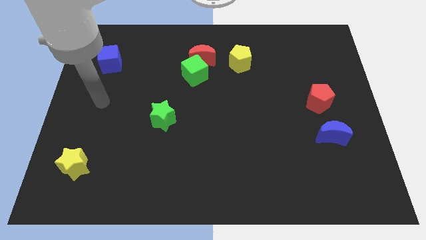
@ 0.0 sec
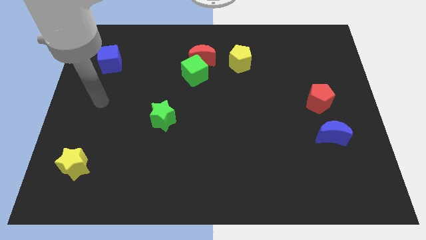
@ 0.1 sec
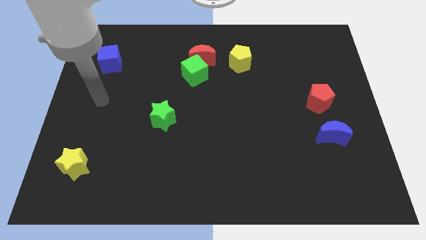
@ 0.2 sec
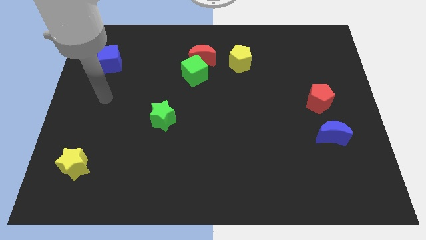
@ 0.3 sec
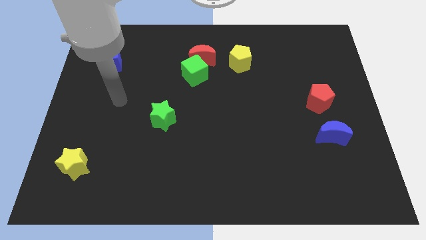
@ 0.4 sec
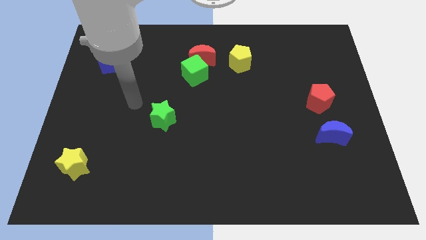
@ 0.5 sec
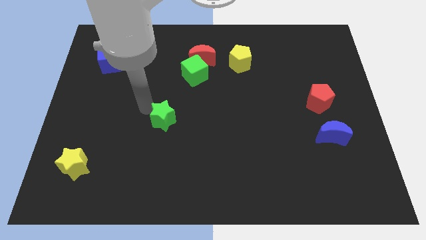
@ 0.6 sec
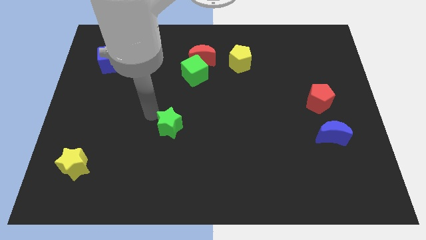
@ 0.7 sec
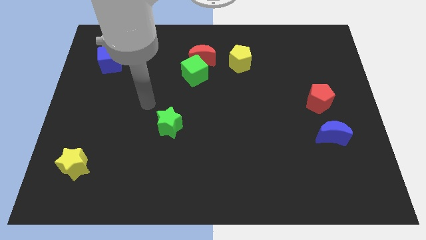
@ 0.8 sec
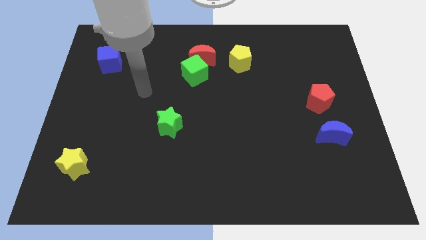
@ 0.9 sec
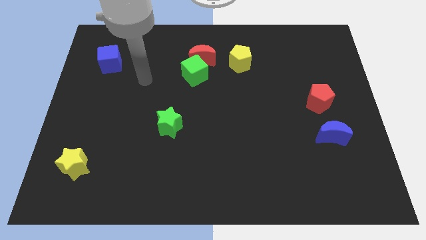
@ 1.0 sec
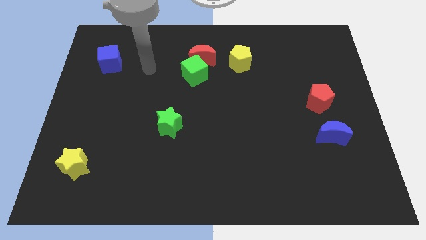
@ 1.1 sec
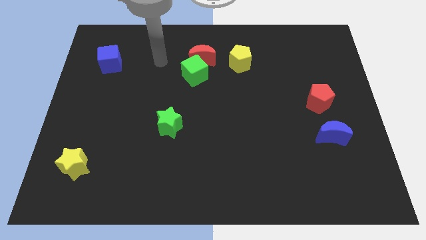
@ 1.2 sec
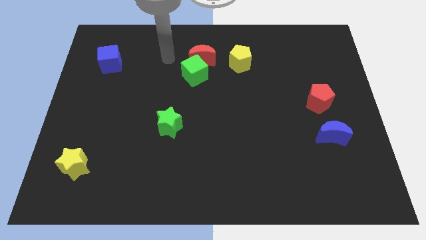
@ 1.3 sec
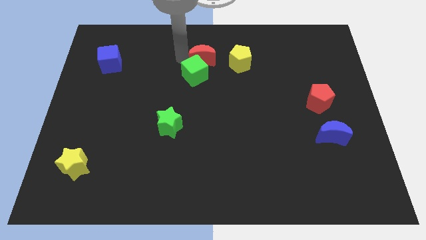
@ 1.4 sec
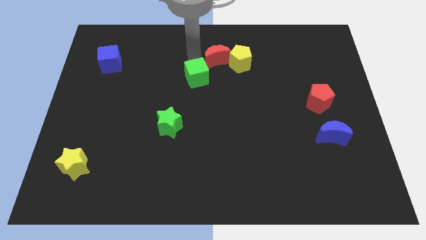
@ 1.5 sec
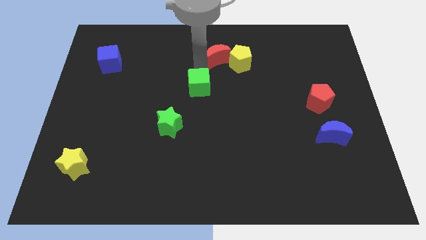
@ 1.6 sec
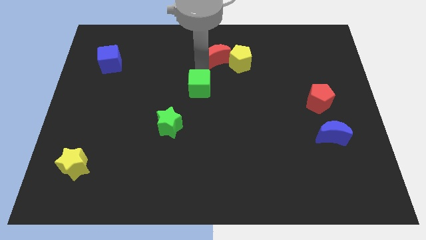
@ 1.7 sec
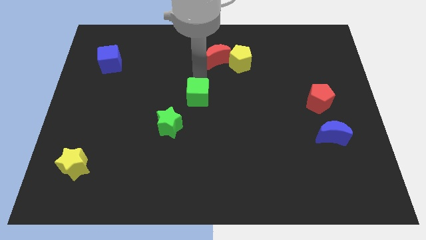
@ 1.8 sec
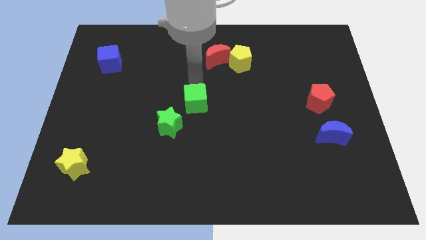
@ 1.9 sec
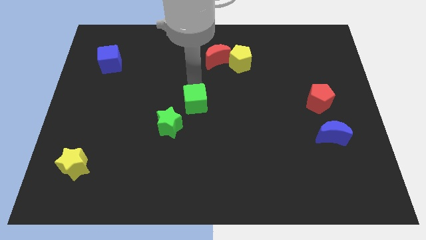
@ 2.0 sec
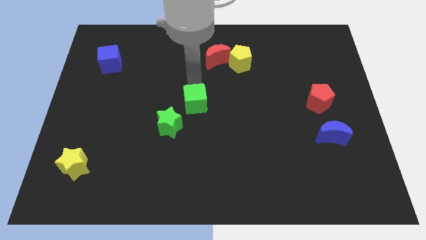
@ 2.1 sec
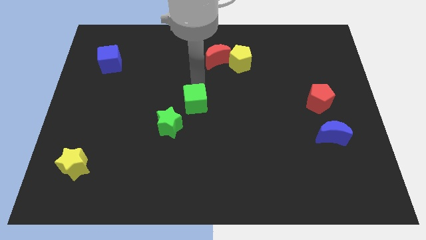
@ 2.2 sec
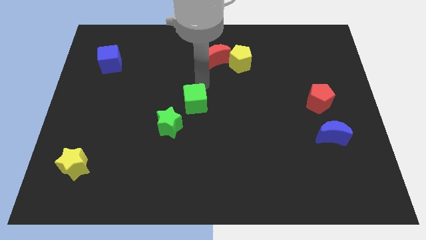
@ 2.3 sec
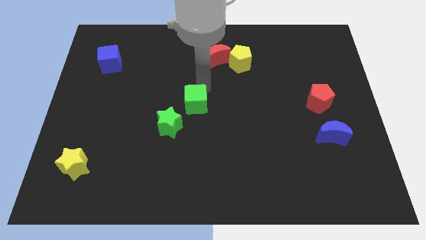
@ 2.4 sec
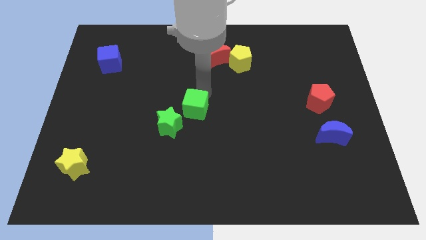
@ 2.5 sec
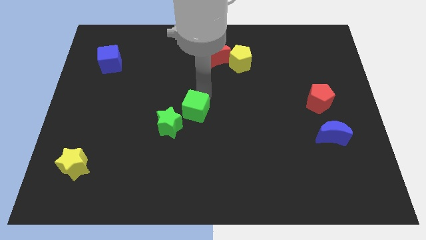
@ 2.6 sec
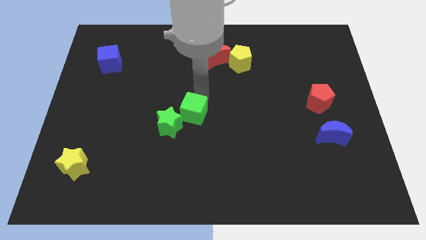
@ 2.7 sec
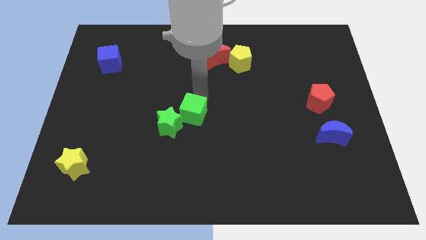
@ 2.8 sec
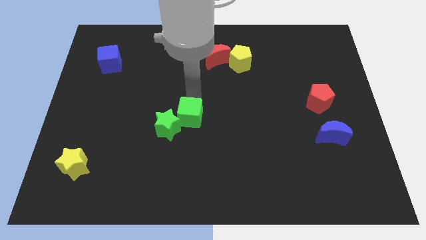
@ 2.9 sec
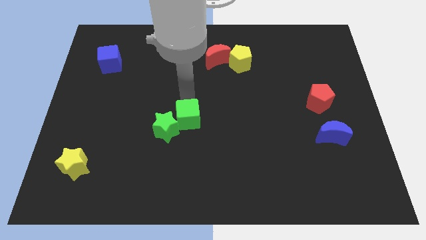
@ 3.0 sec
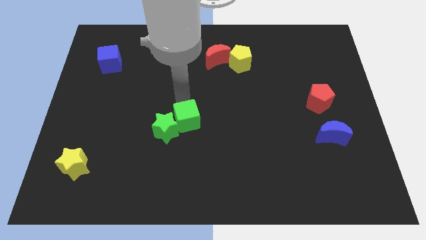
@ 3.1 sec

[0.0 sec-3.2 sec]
move your arm close to the green star

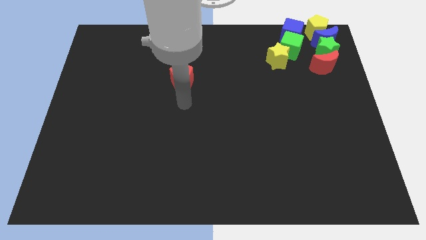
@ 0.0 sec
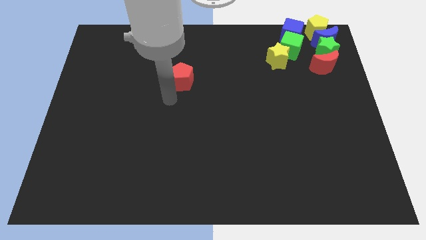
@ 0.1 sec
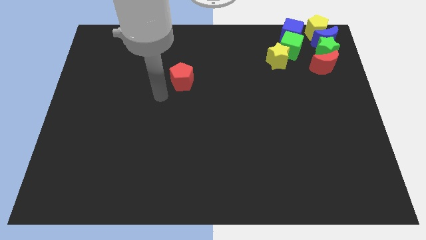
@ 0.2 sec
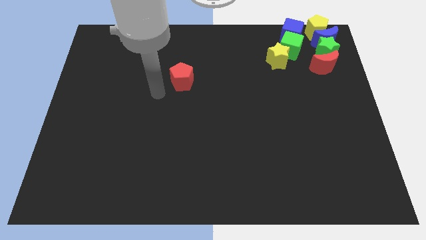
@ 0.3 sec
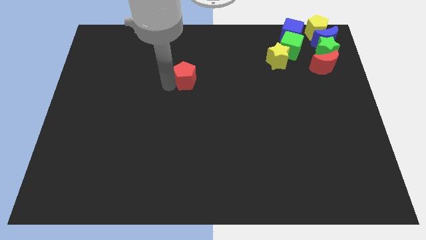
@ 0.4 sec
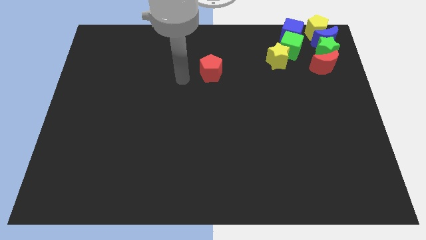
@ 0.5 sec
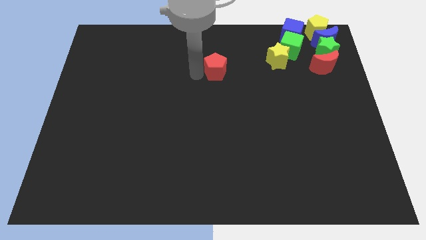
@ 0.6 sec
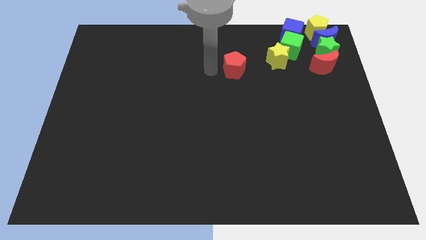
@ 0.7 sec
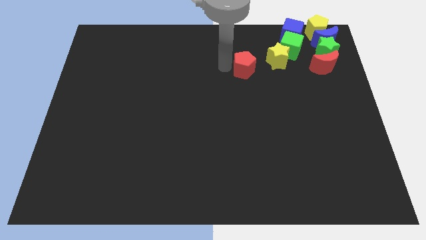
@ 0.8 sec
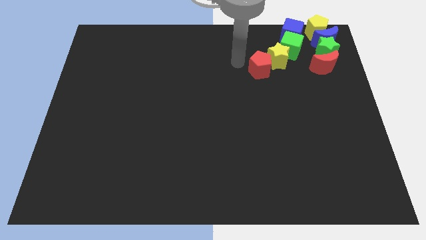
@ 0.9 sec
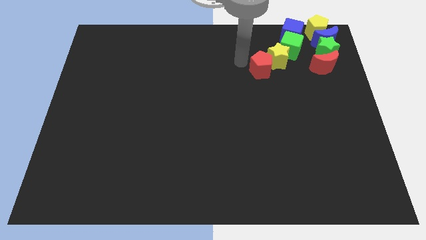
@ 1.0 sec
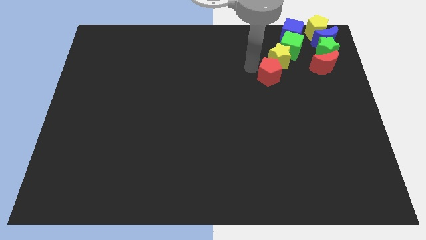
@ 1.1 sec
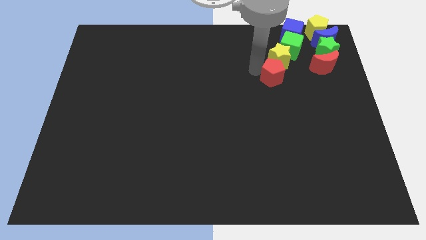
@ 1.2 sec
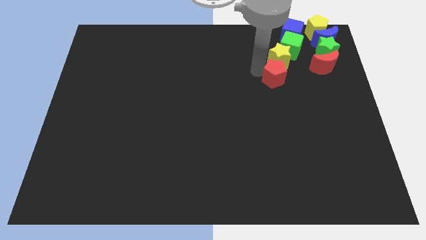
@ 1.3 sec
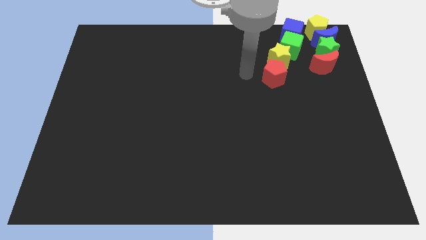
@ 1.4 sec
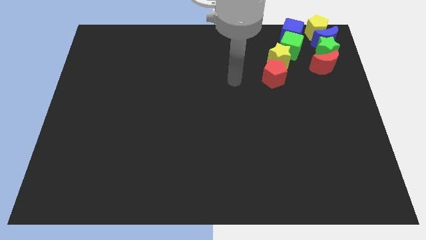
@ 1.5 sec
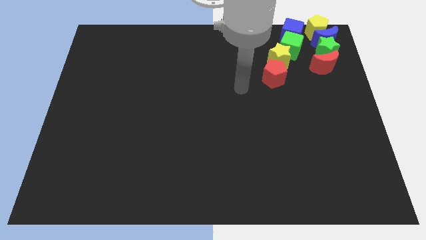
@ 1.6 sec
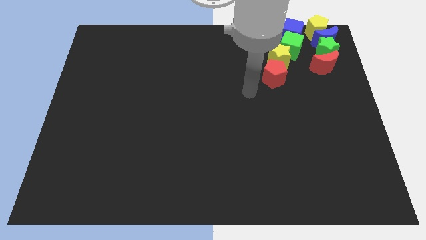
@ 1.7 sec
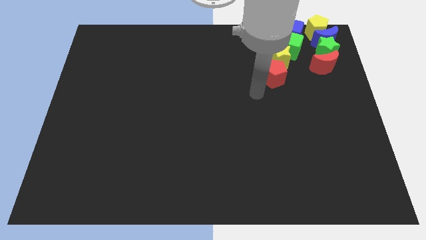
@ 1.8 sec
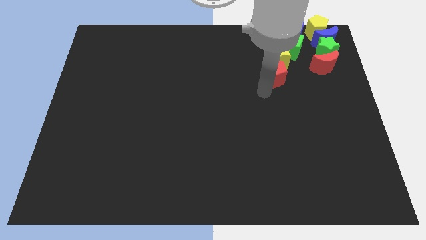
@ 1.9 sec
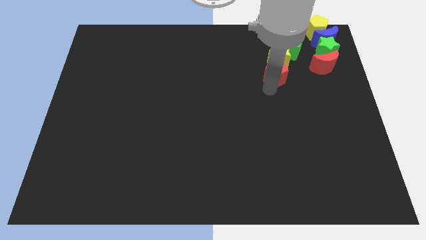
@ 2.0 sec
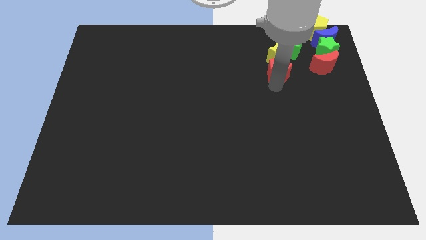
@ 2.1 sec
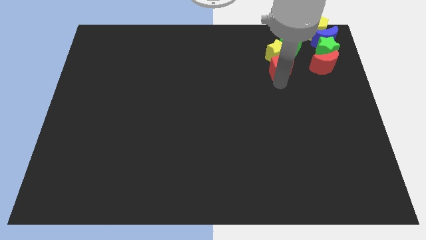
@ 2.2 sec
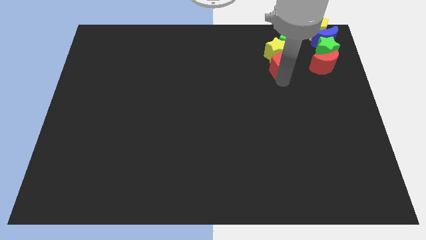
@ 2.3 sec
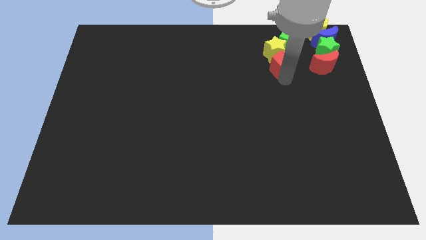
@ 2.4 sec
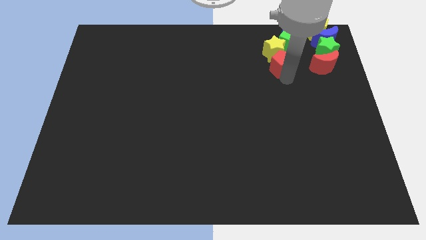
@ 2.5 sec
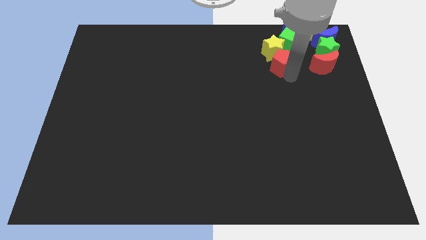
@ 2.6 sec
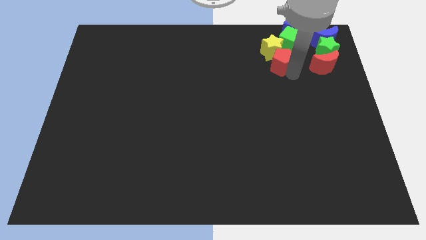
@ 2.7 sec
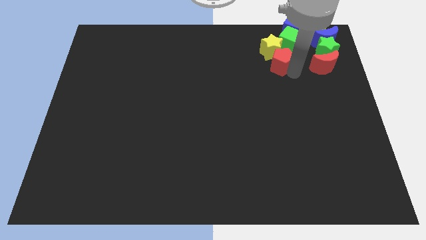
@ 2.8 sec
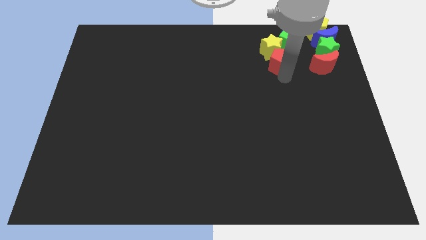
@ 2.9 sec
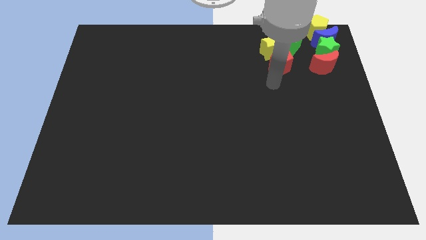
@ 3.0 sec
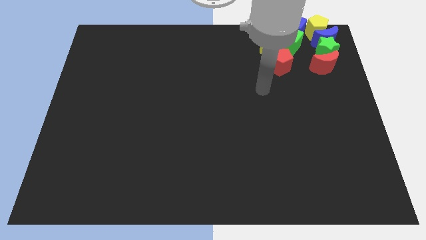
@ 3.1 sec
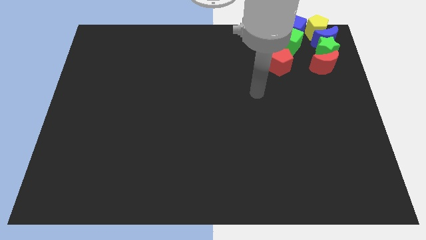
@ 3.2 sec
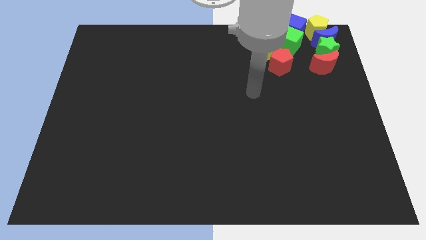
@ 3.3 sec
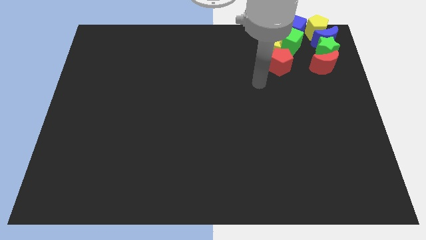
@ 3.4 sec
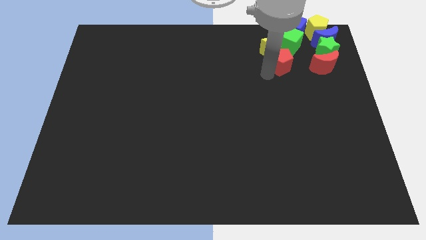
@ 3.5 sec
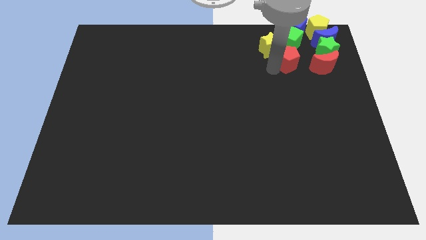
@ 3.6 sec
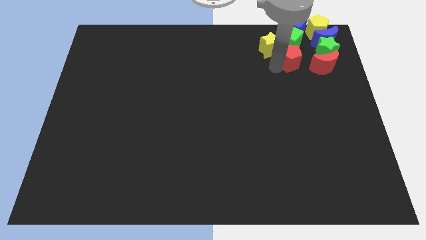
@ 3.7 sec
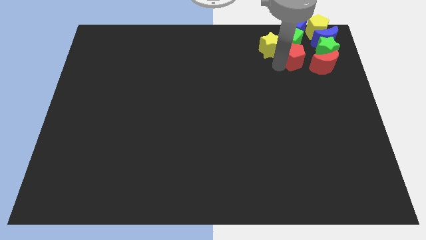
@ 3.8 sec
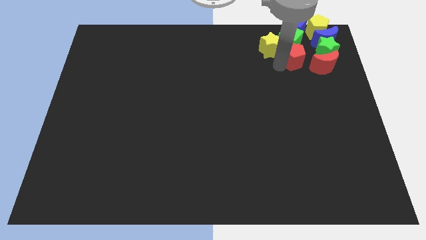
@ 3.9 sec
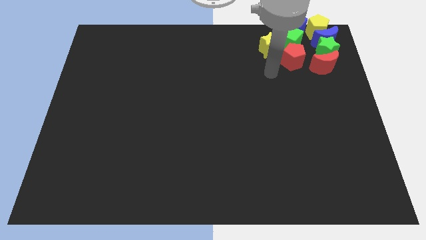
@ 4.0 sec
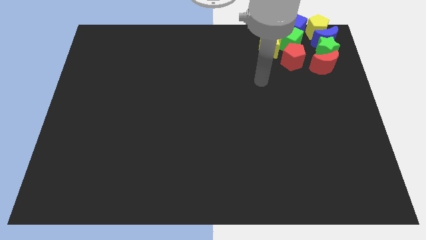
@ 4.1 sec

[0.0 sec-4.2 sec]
push the red pentagon into the green cube

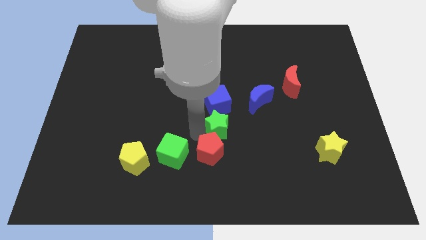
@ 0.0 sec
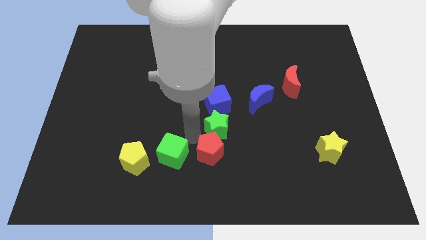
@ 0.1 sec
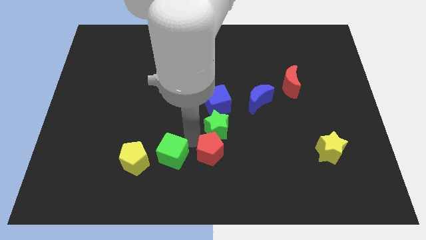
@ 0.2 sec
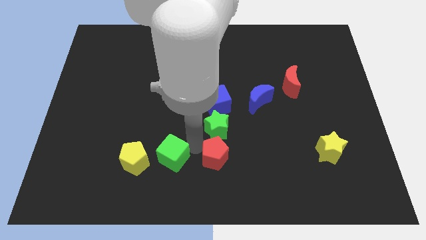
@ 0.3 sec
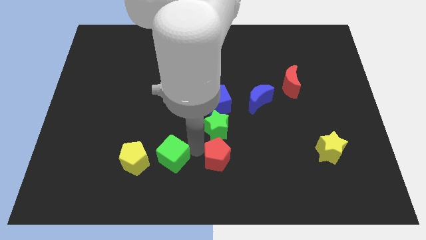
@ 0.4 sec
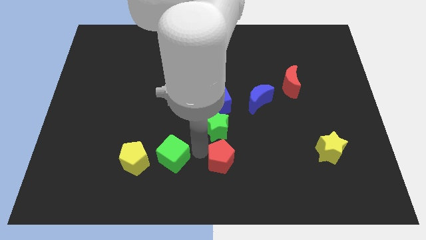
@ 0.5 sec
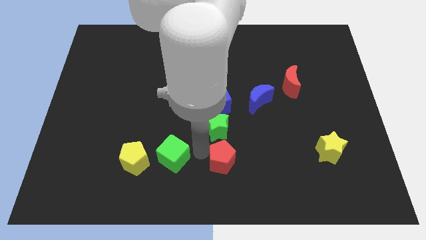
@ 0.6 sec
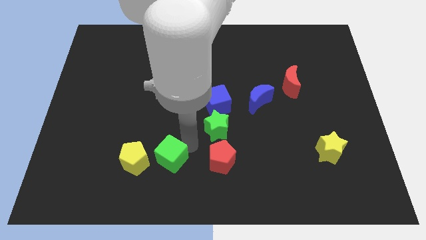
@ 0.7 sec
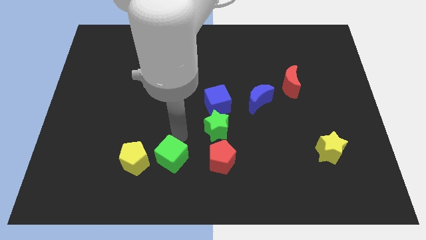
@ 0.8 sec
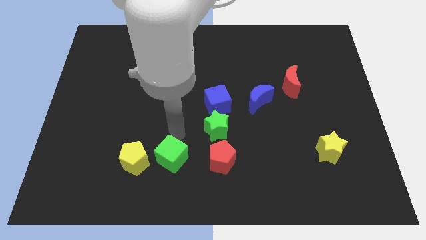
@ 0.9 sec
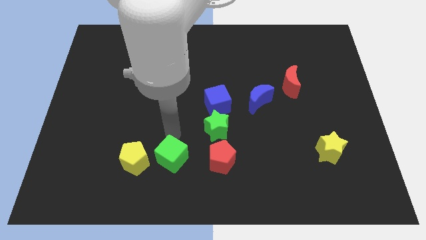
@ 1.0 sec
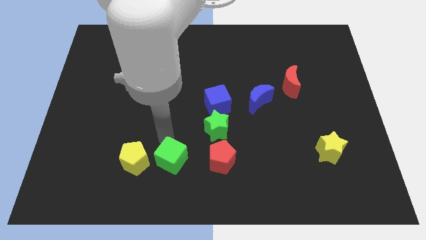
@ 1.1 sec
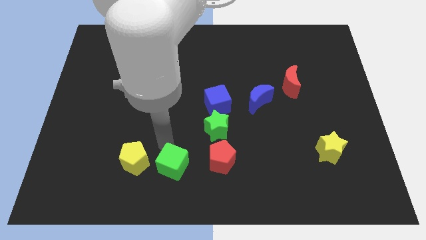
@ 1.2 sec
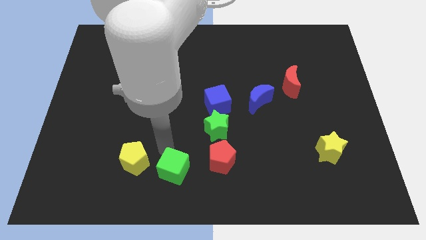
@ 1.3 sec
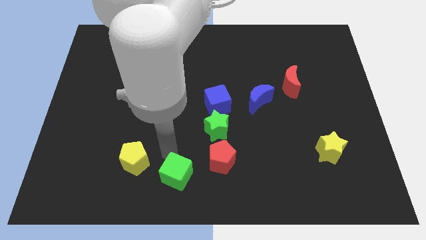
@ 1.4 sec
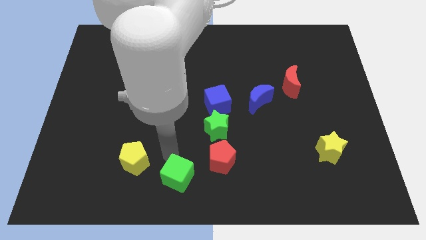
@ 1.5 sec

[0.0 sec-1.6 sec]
push the red pentagon and green cube slightly to the right
